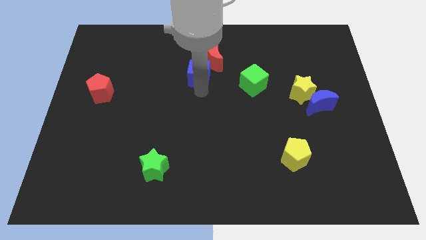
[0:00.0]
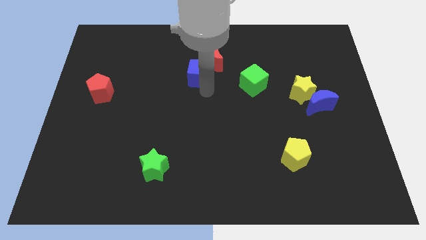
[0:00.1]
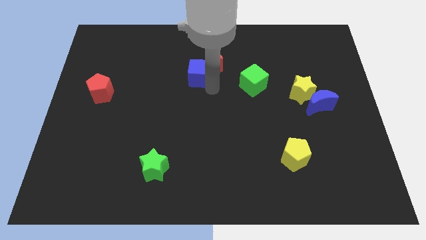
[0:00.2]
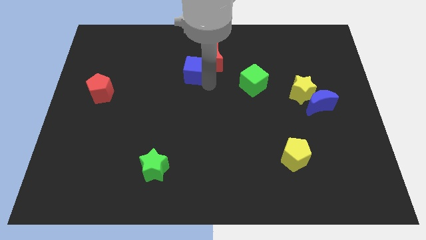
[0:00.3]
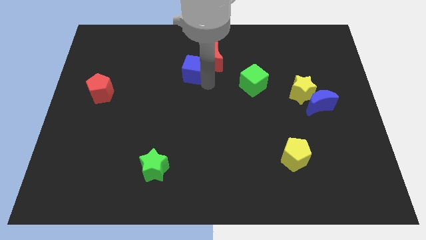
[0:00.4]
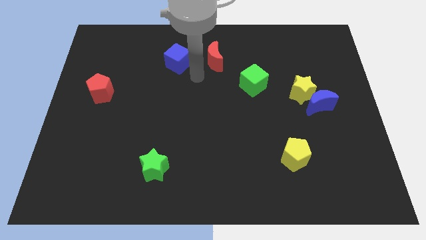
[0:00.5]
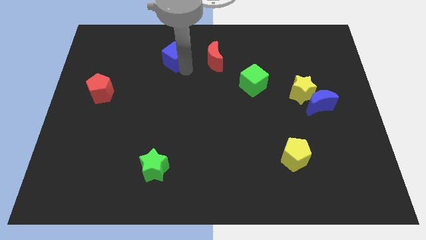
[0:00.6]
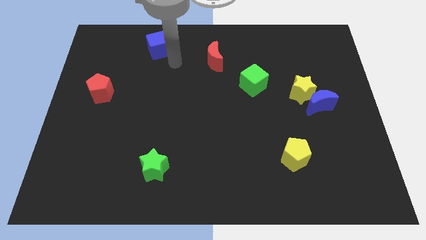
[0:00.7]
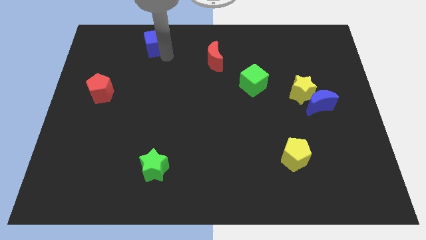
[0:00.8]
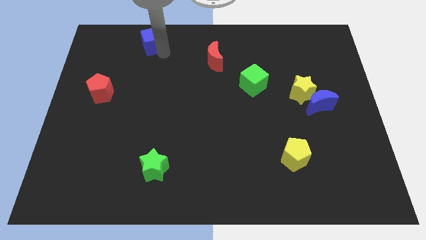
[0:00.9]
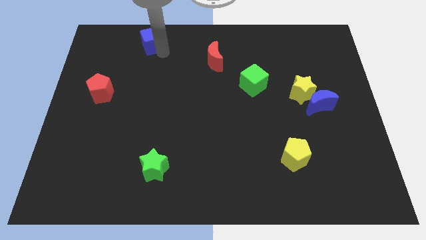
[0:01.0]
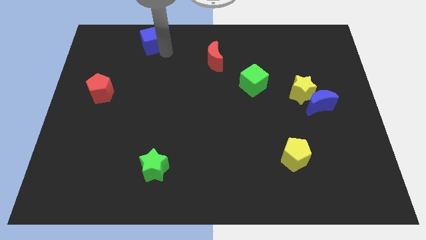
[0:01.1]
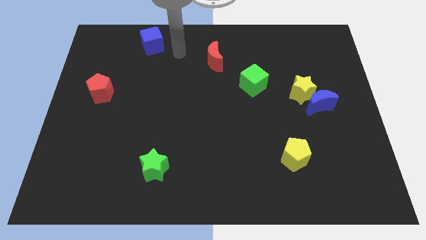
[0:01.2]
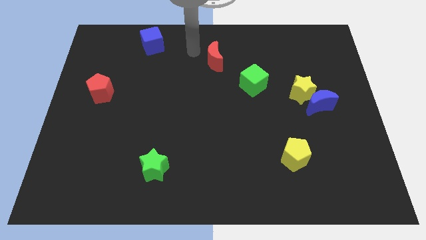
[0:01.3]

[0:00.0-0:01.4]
move blue cube to the top

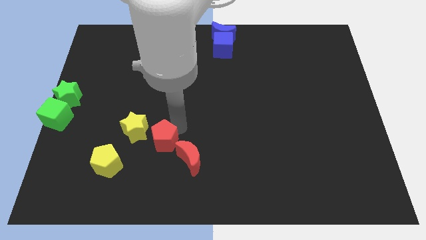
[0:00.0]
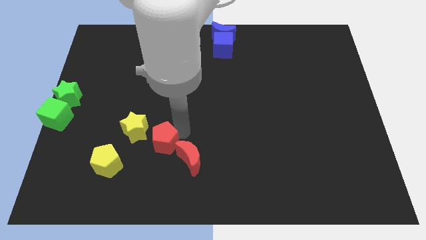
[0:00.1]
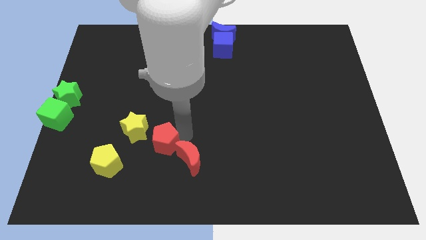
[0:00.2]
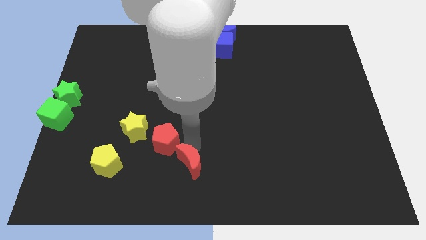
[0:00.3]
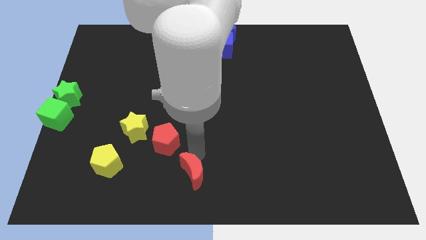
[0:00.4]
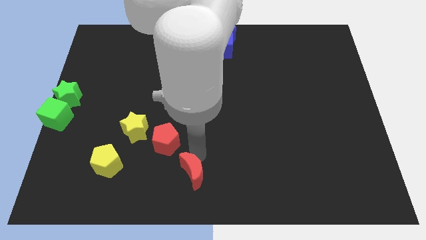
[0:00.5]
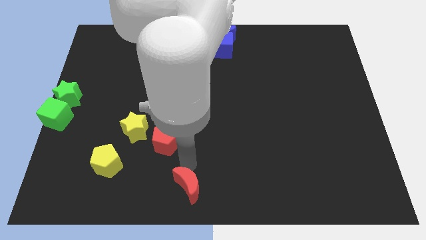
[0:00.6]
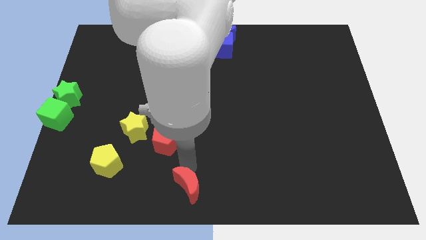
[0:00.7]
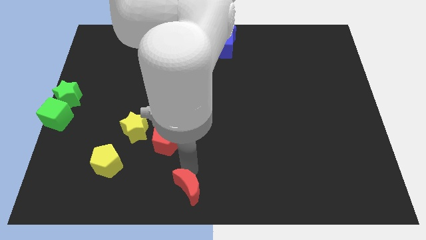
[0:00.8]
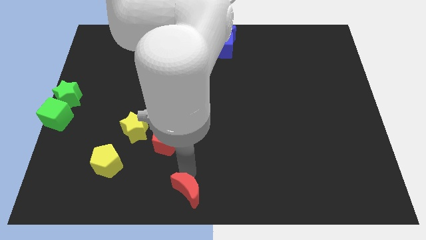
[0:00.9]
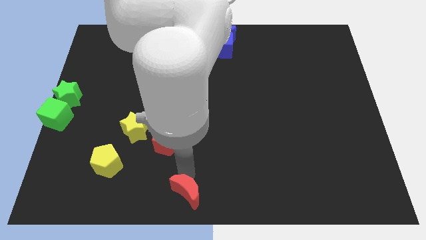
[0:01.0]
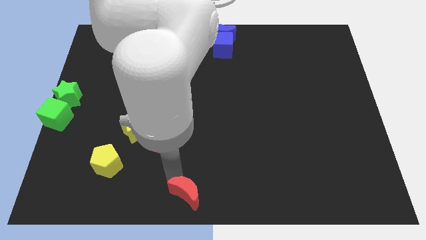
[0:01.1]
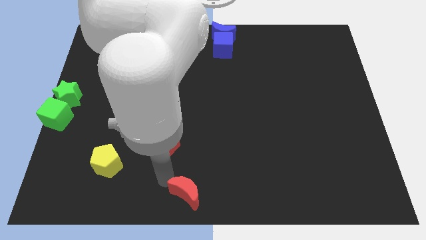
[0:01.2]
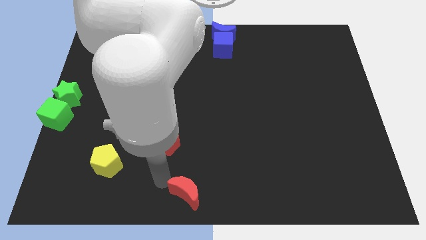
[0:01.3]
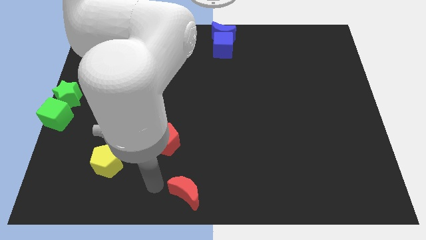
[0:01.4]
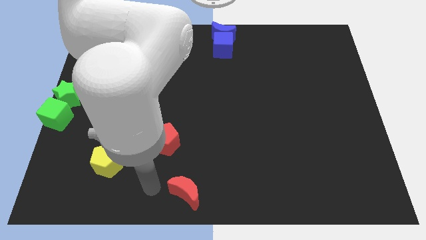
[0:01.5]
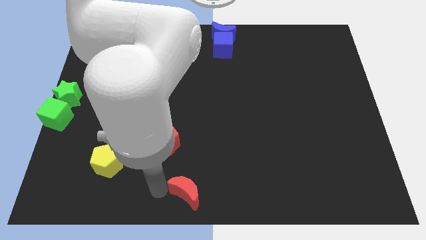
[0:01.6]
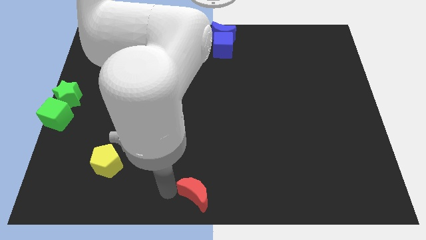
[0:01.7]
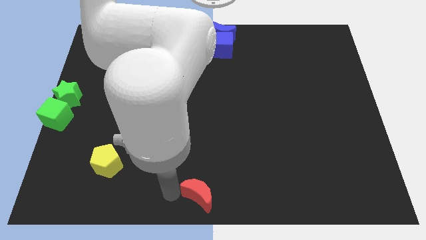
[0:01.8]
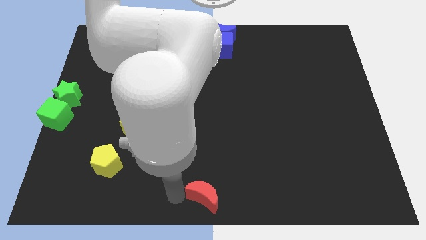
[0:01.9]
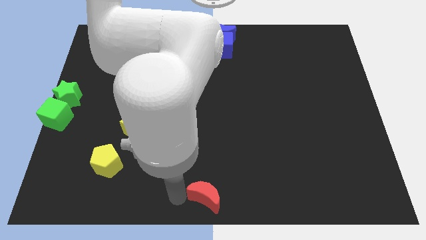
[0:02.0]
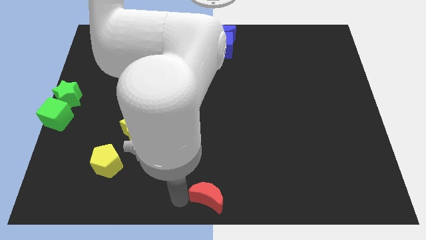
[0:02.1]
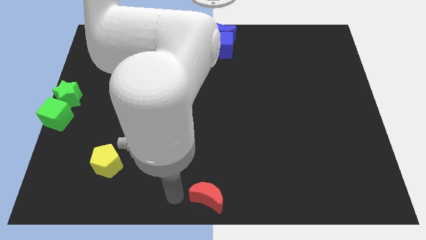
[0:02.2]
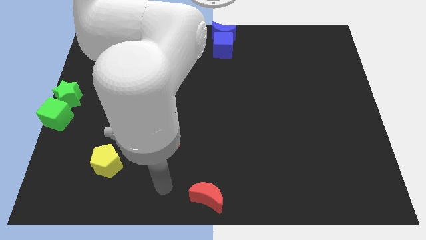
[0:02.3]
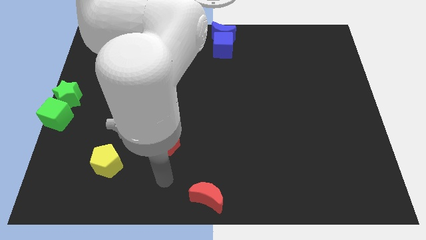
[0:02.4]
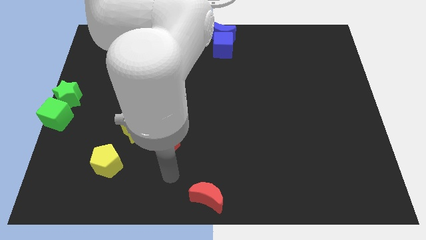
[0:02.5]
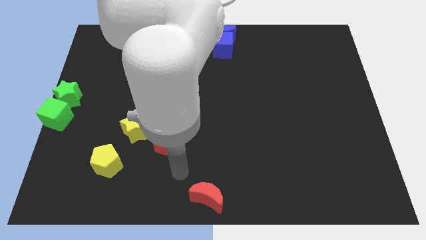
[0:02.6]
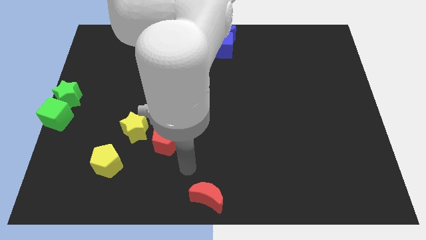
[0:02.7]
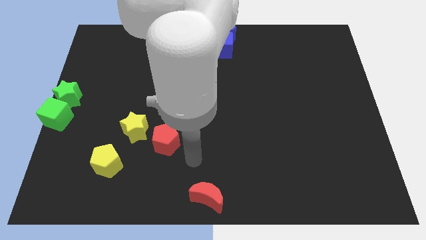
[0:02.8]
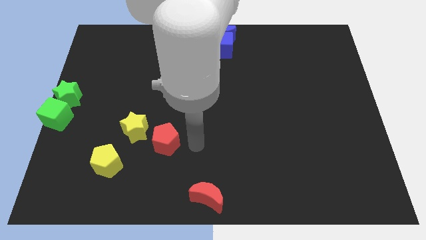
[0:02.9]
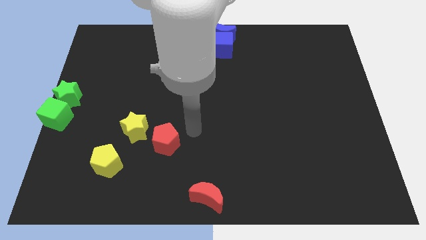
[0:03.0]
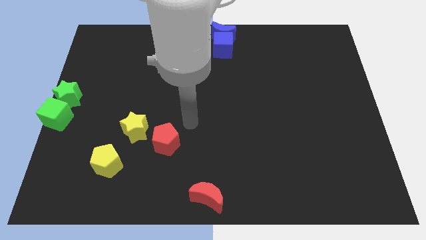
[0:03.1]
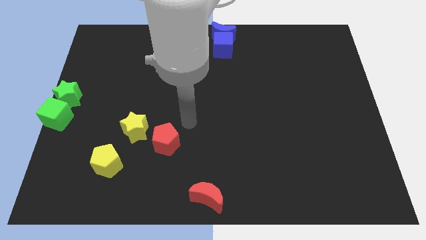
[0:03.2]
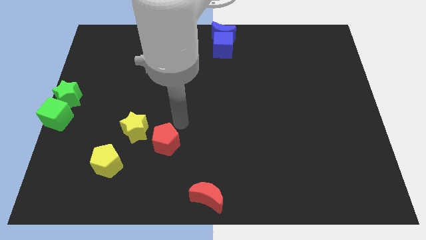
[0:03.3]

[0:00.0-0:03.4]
separate the red crescent from the red pentagon

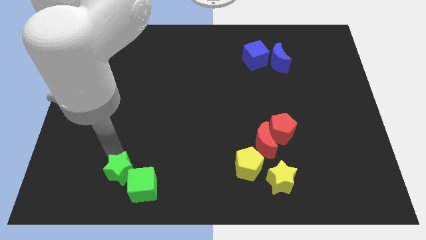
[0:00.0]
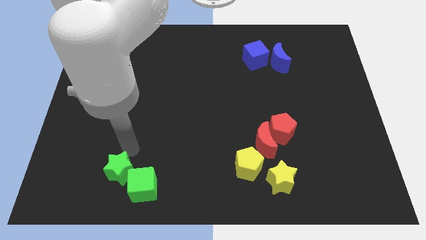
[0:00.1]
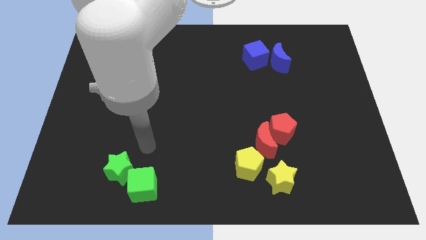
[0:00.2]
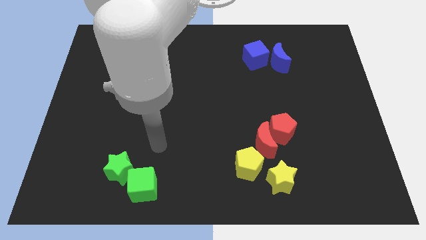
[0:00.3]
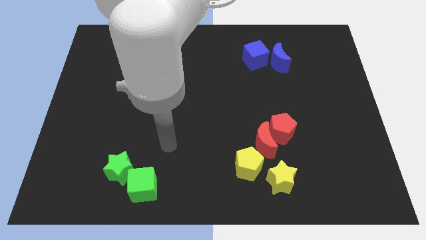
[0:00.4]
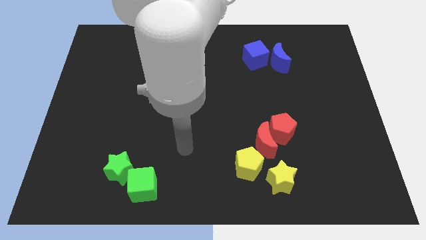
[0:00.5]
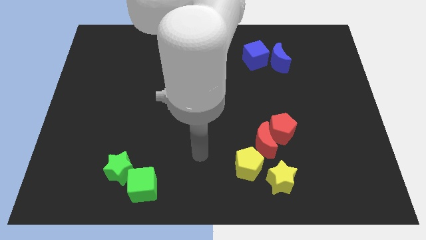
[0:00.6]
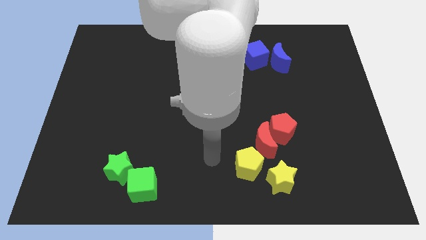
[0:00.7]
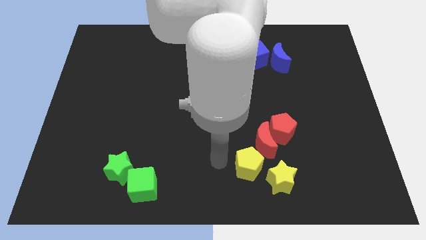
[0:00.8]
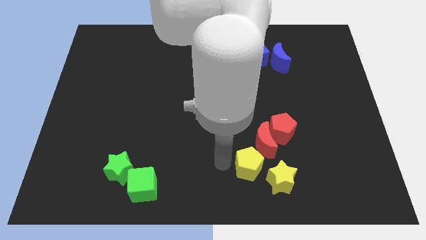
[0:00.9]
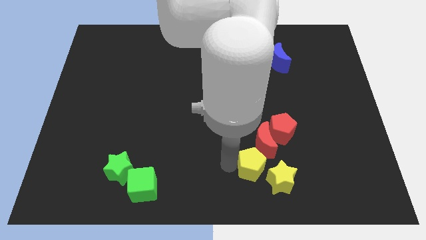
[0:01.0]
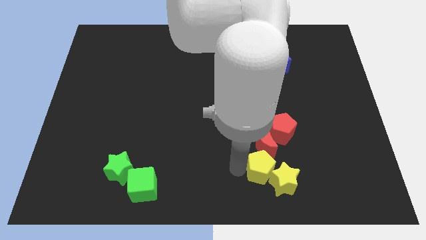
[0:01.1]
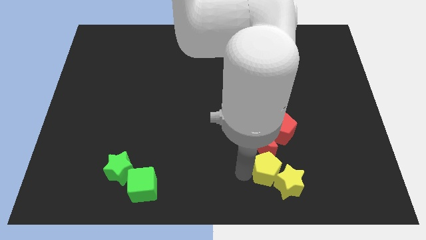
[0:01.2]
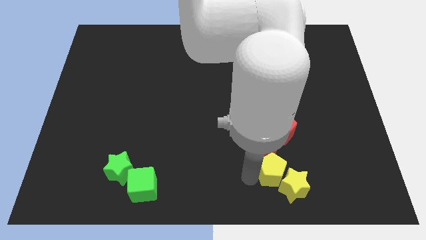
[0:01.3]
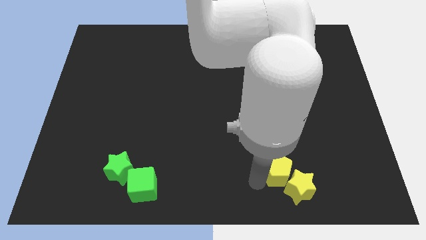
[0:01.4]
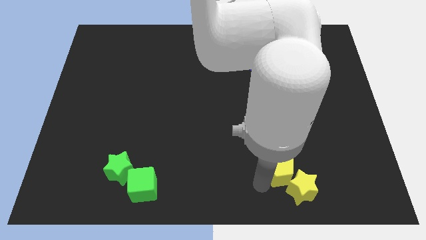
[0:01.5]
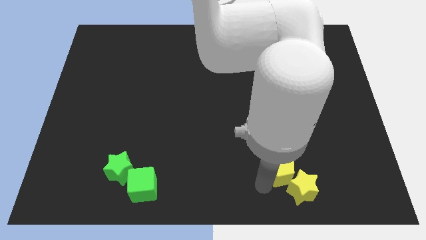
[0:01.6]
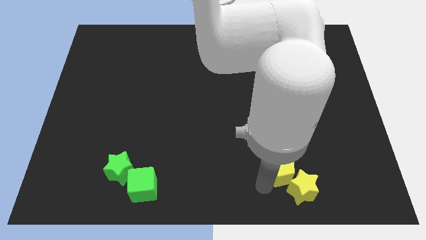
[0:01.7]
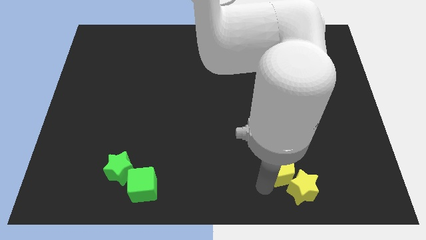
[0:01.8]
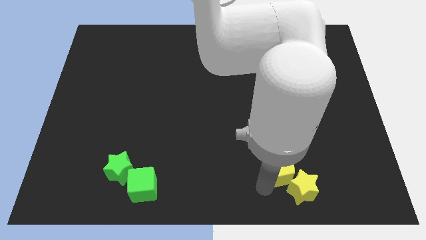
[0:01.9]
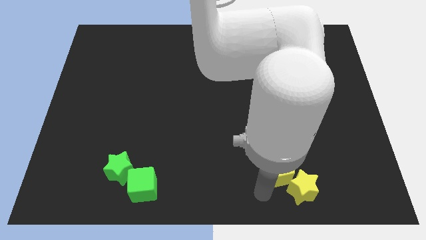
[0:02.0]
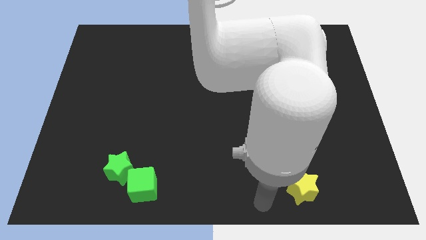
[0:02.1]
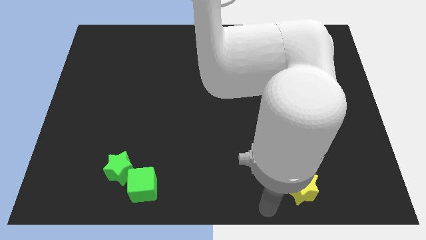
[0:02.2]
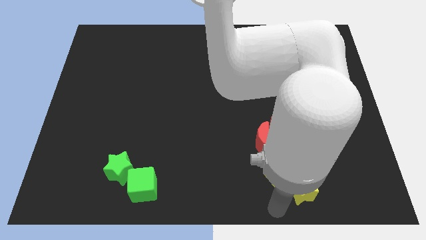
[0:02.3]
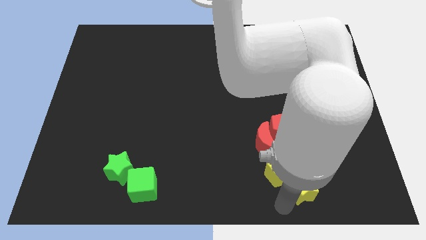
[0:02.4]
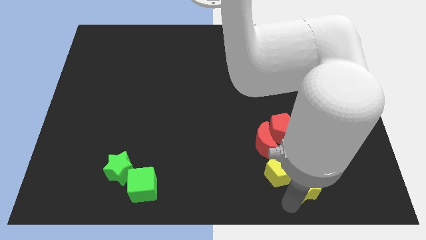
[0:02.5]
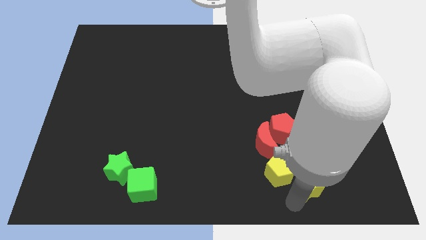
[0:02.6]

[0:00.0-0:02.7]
push yellow pentagon into the yellow star

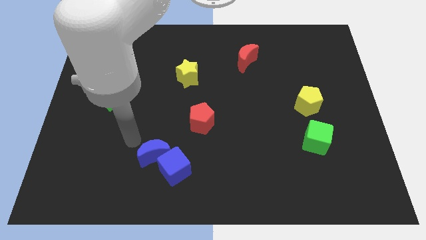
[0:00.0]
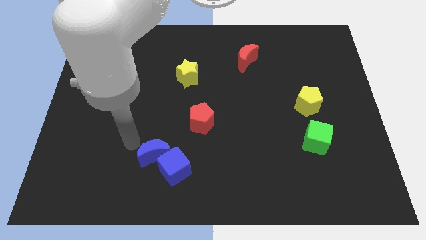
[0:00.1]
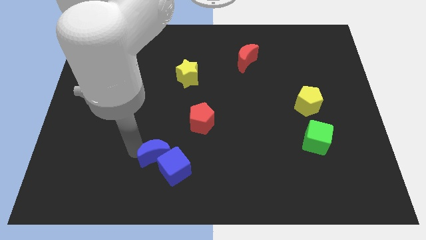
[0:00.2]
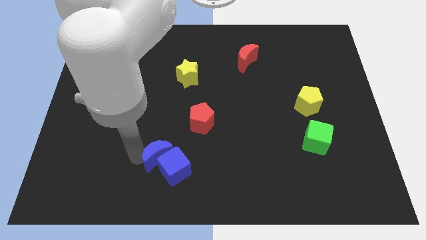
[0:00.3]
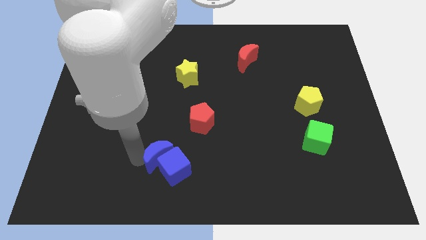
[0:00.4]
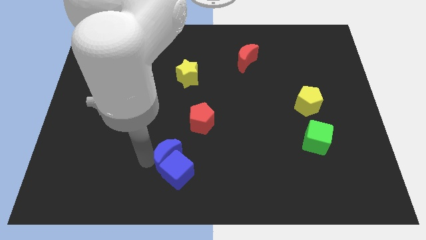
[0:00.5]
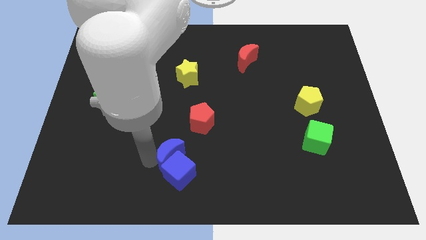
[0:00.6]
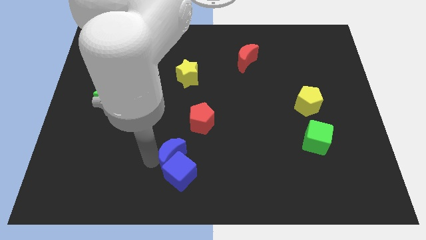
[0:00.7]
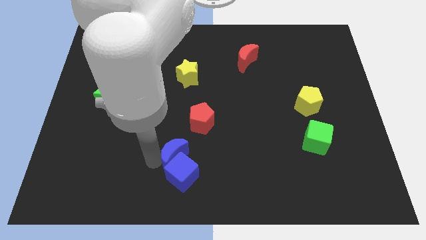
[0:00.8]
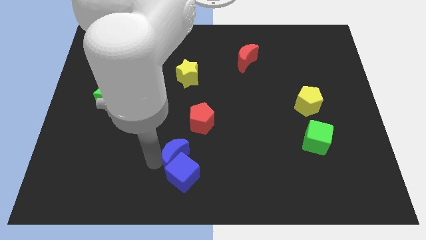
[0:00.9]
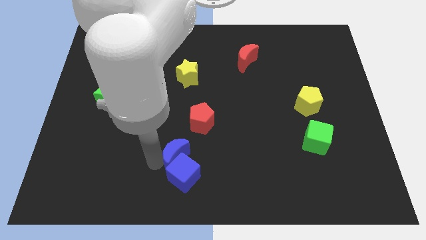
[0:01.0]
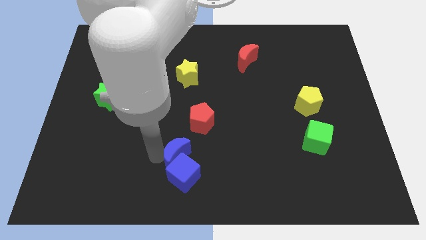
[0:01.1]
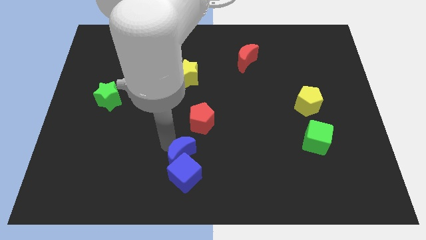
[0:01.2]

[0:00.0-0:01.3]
move the blue blocks slightly towards bottom centre
